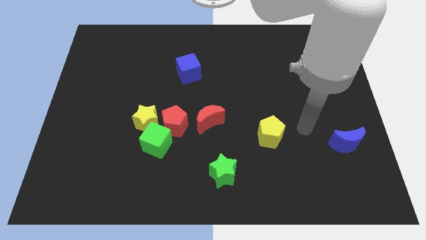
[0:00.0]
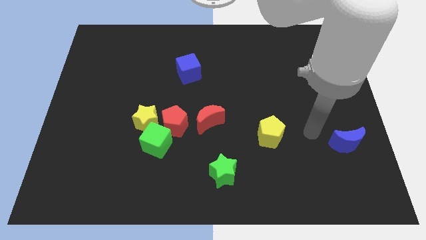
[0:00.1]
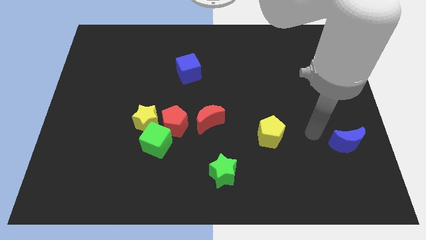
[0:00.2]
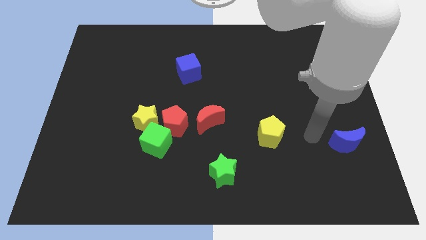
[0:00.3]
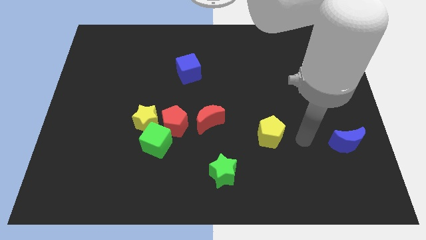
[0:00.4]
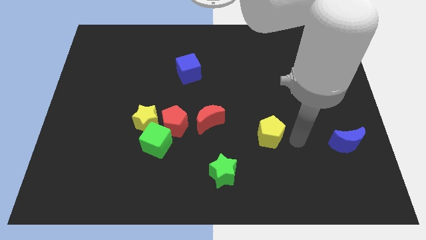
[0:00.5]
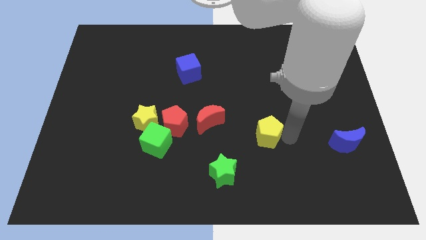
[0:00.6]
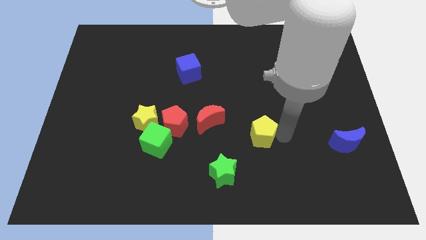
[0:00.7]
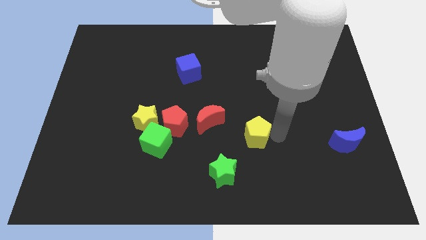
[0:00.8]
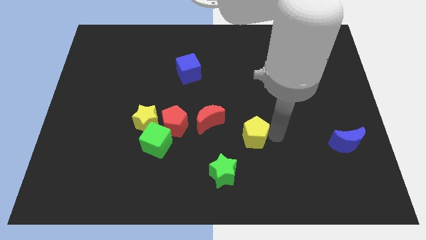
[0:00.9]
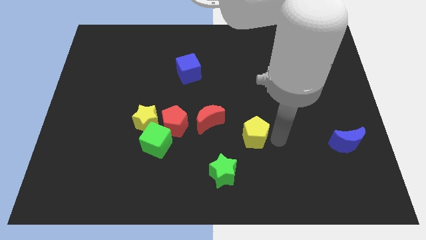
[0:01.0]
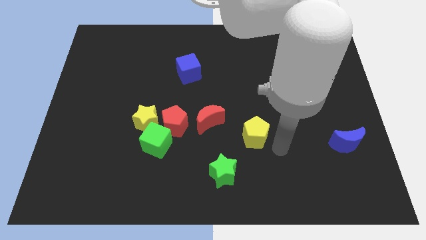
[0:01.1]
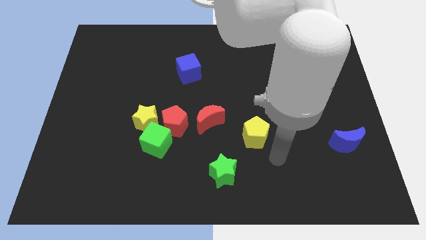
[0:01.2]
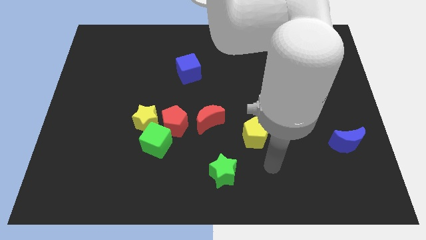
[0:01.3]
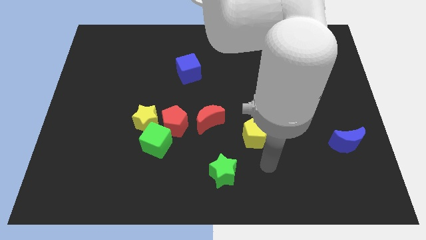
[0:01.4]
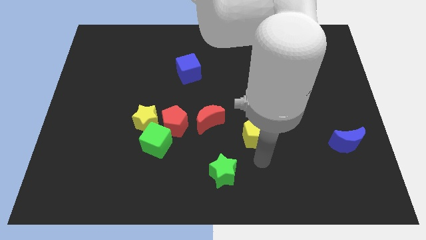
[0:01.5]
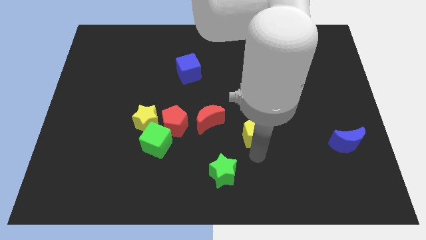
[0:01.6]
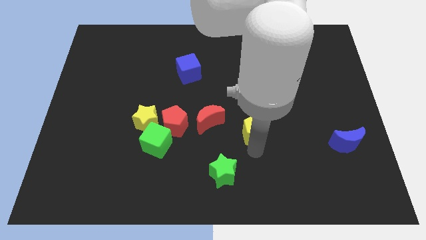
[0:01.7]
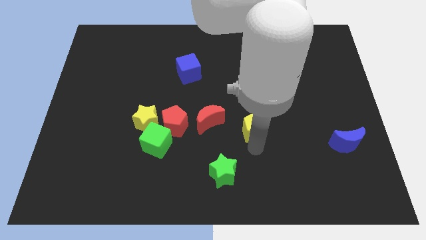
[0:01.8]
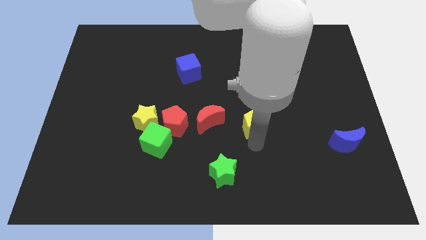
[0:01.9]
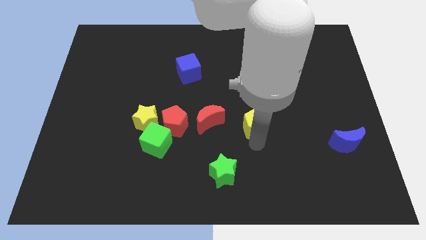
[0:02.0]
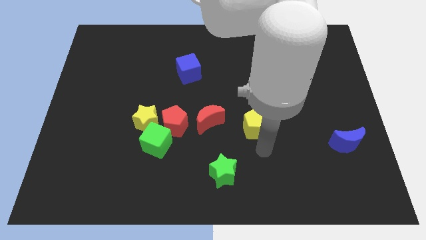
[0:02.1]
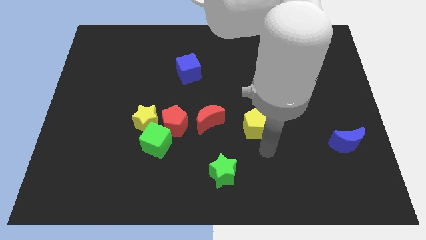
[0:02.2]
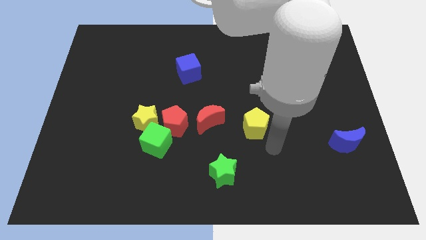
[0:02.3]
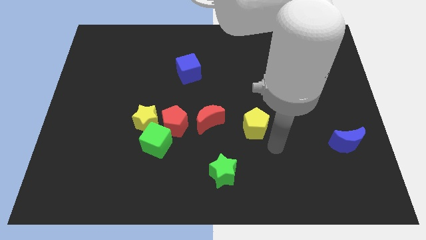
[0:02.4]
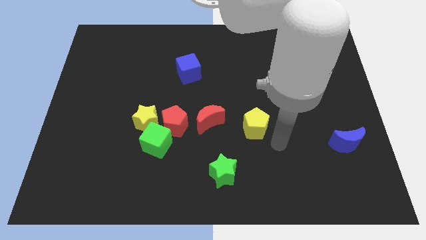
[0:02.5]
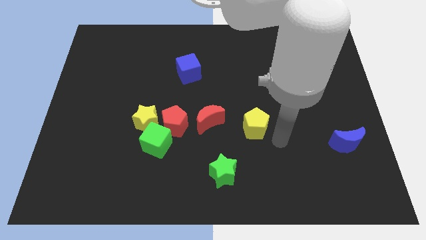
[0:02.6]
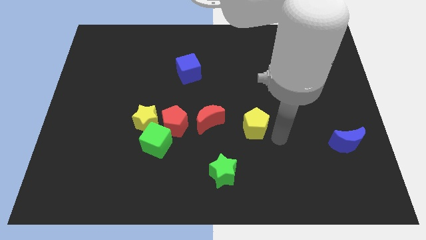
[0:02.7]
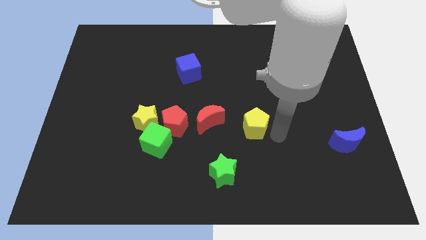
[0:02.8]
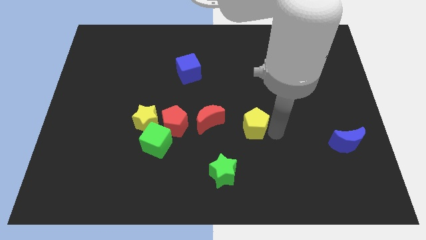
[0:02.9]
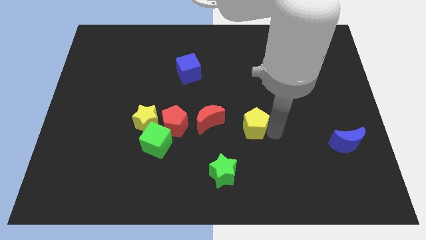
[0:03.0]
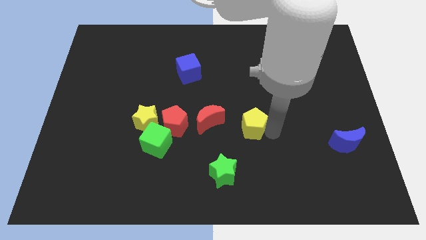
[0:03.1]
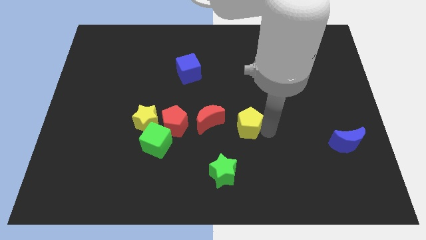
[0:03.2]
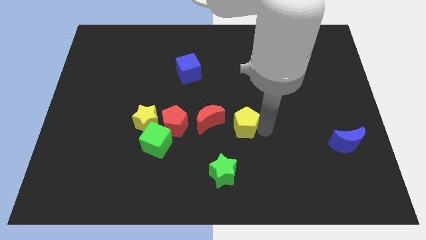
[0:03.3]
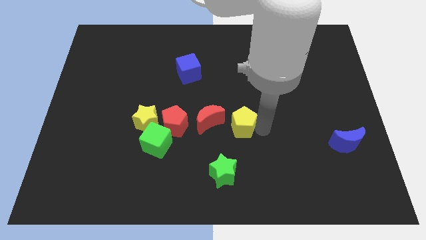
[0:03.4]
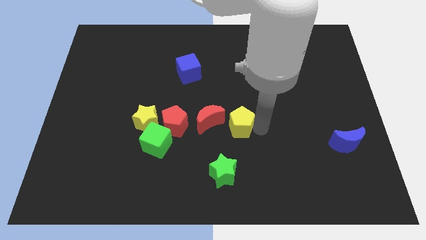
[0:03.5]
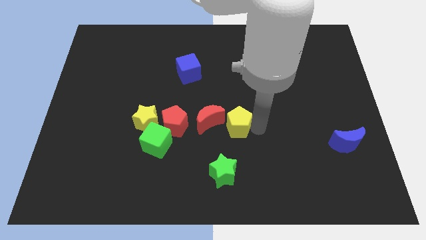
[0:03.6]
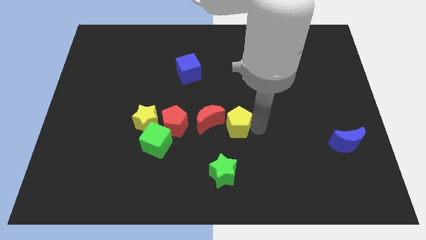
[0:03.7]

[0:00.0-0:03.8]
move the yellow pentagon close to the red moon

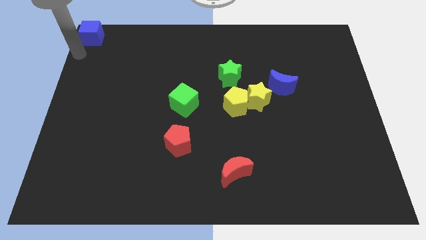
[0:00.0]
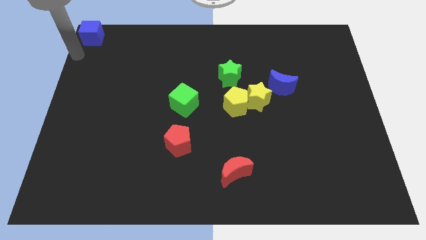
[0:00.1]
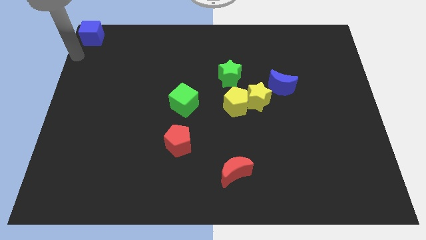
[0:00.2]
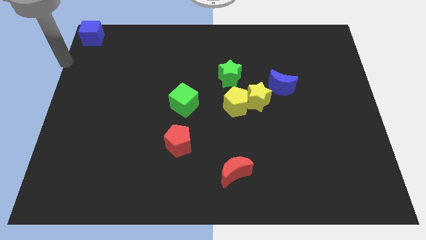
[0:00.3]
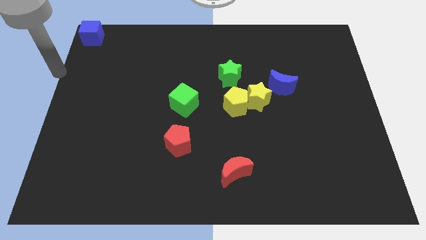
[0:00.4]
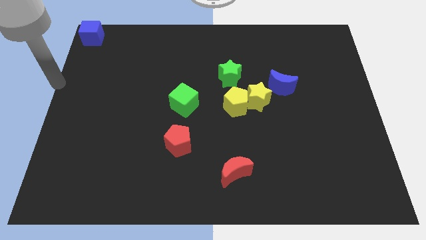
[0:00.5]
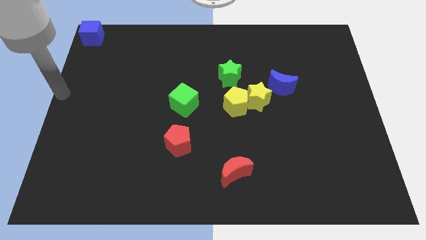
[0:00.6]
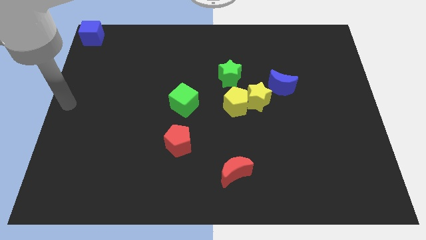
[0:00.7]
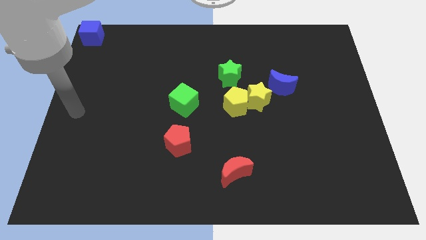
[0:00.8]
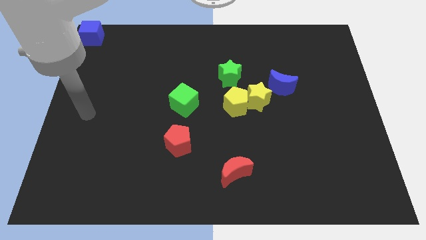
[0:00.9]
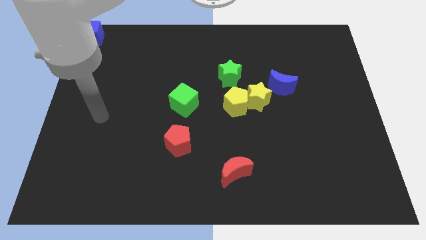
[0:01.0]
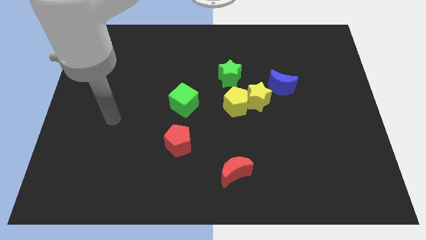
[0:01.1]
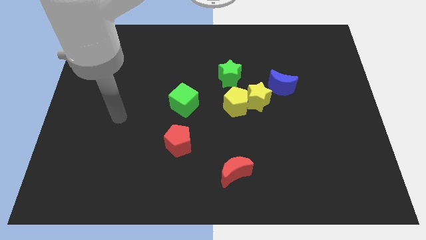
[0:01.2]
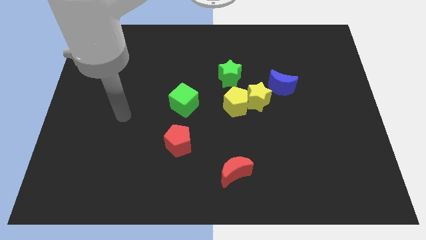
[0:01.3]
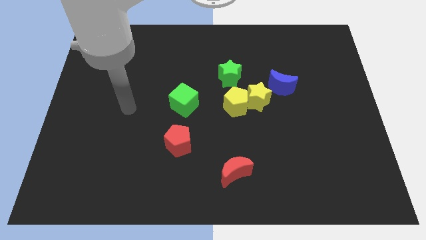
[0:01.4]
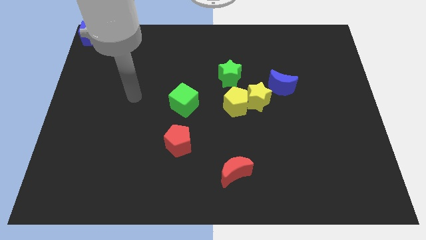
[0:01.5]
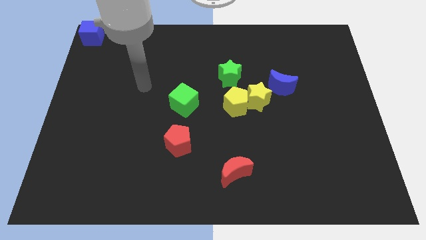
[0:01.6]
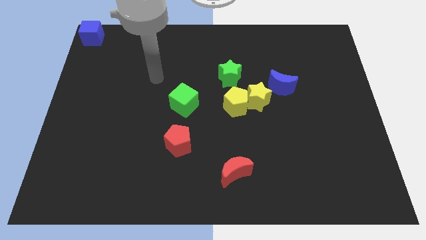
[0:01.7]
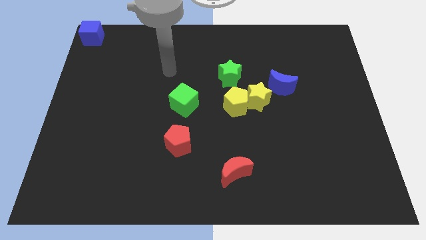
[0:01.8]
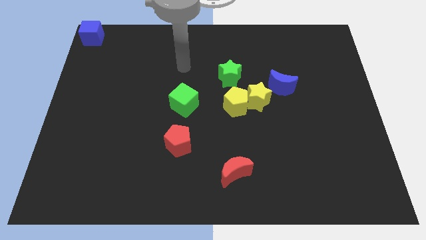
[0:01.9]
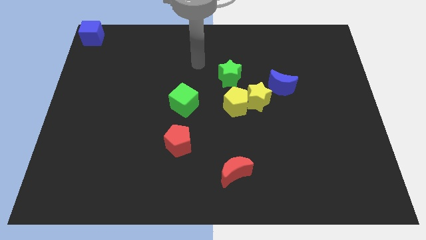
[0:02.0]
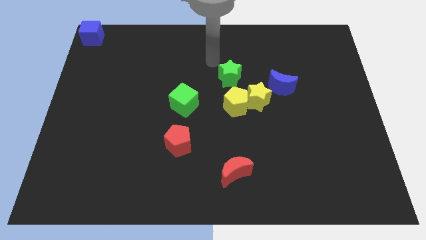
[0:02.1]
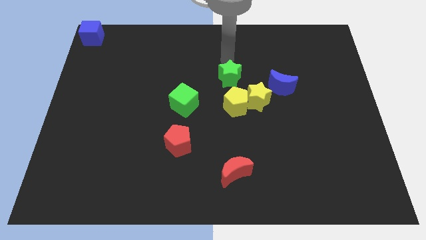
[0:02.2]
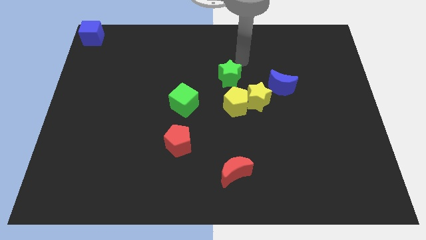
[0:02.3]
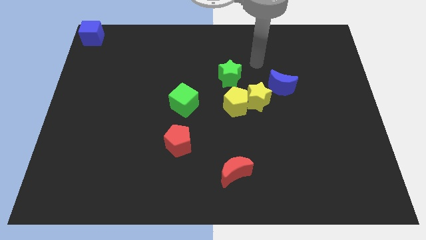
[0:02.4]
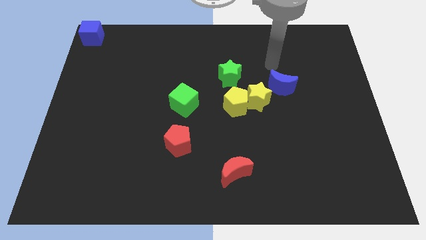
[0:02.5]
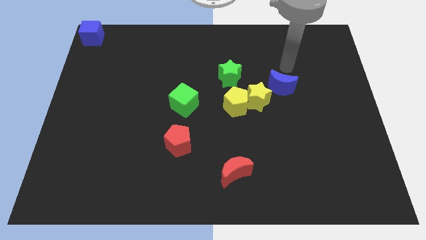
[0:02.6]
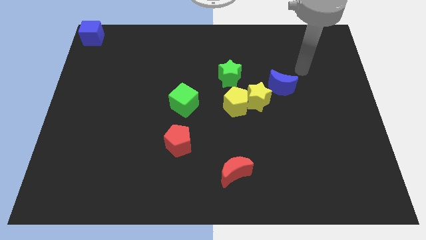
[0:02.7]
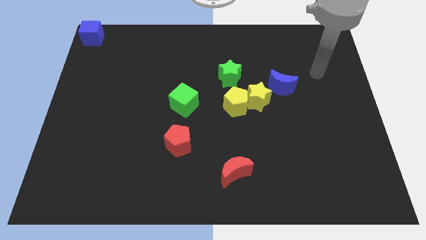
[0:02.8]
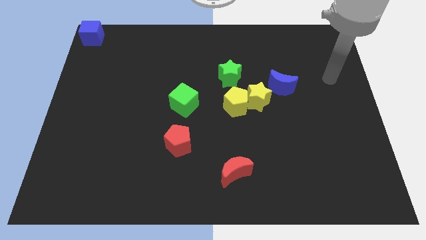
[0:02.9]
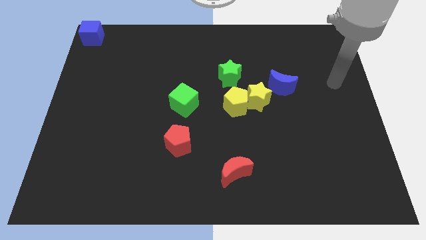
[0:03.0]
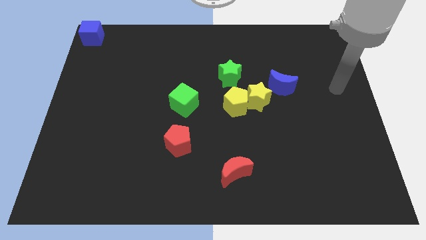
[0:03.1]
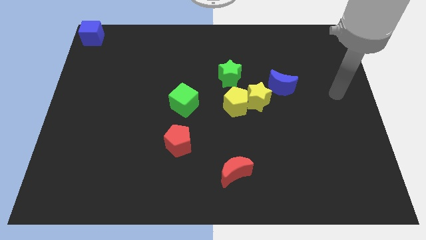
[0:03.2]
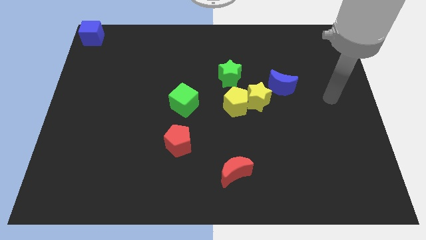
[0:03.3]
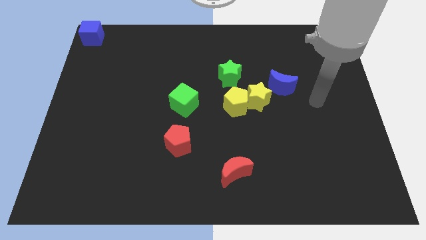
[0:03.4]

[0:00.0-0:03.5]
move the arm away from the blue cube

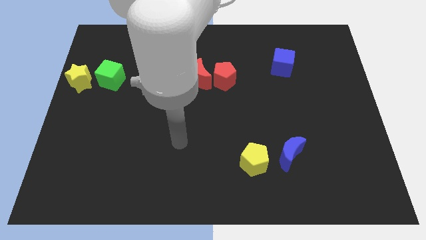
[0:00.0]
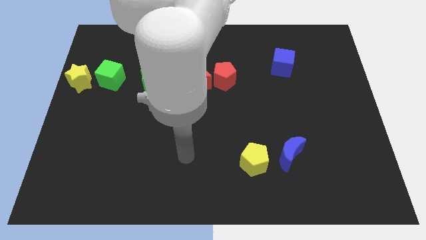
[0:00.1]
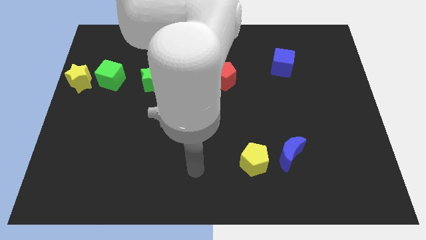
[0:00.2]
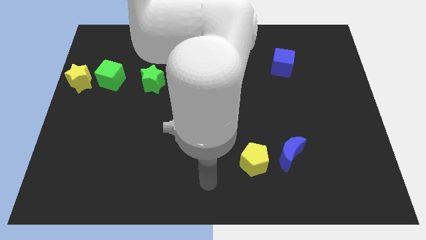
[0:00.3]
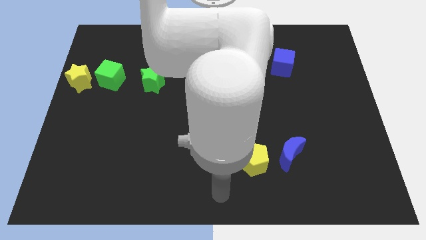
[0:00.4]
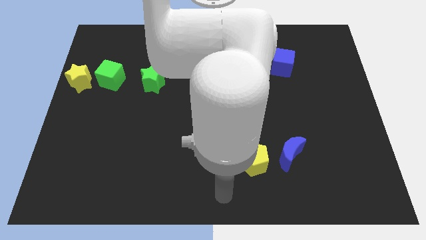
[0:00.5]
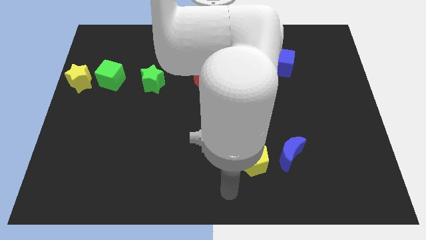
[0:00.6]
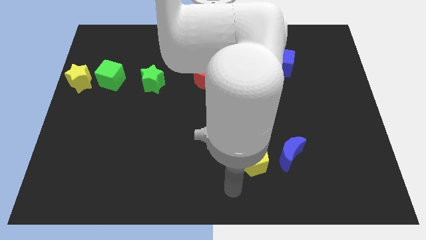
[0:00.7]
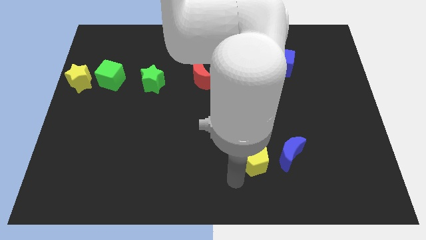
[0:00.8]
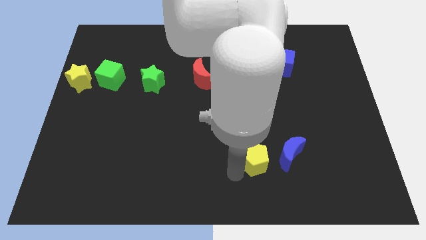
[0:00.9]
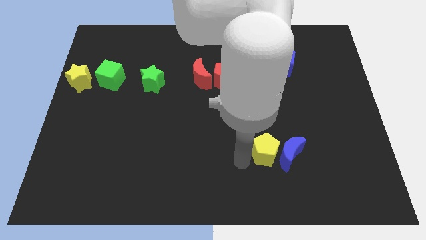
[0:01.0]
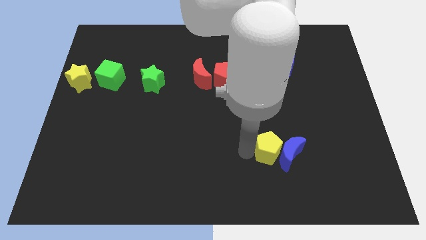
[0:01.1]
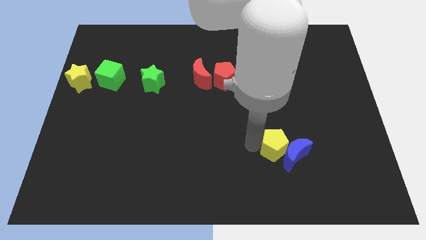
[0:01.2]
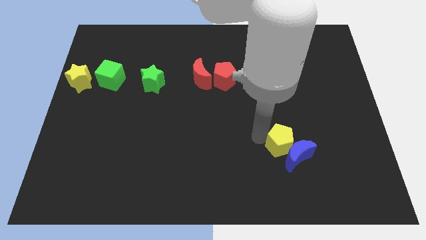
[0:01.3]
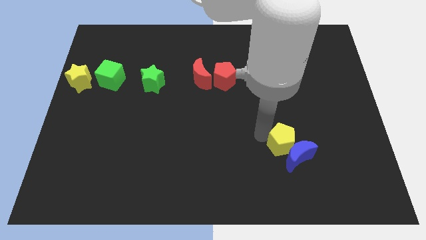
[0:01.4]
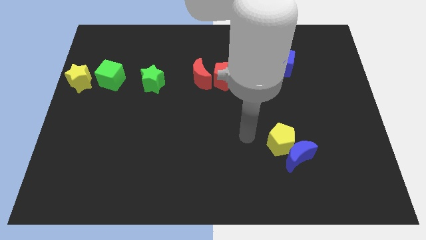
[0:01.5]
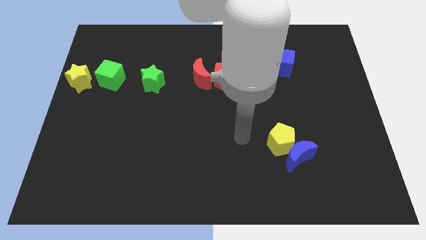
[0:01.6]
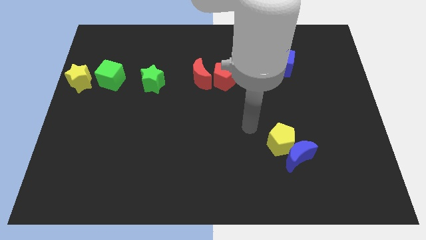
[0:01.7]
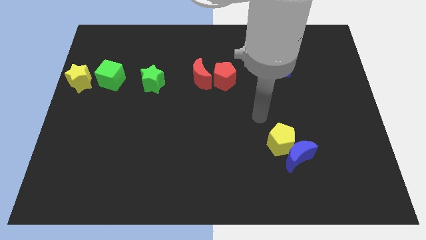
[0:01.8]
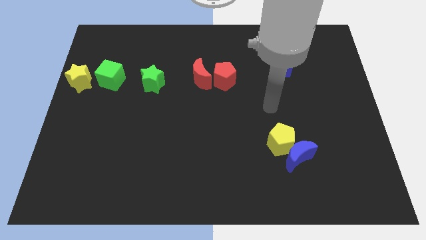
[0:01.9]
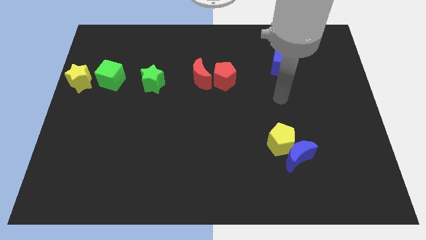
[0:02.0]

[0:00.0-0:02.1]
slide yellow pentagon into blue moon
